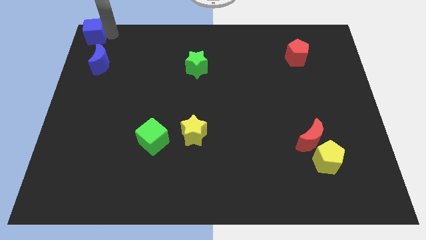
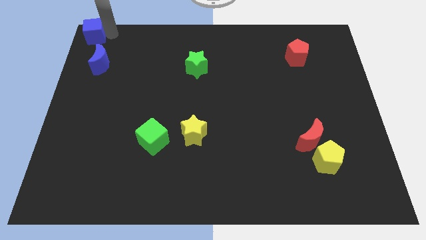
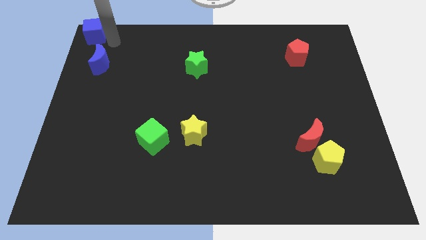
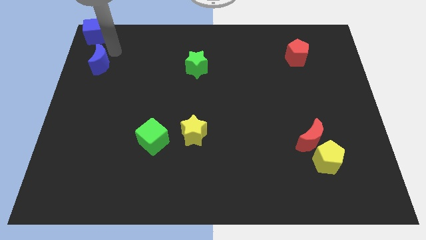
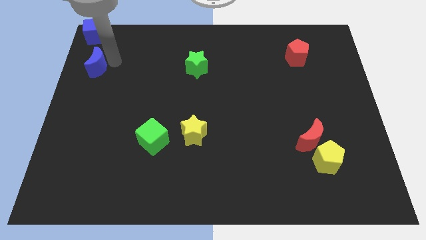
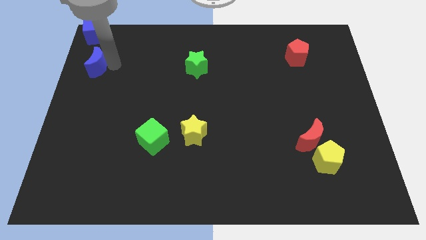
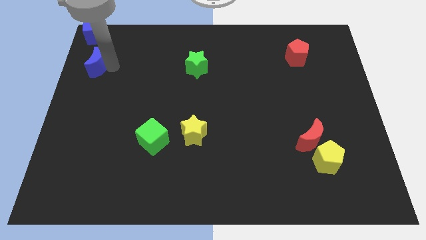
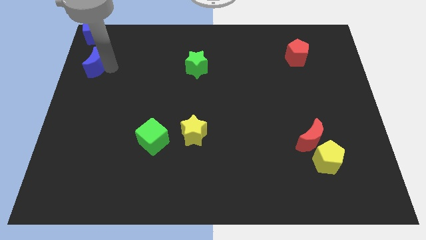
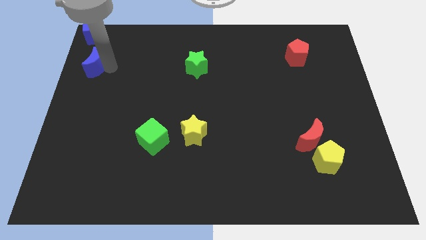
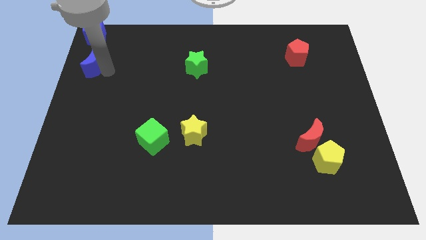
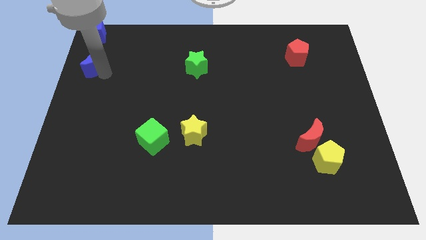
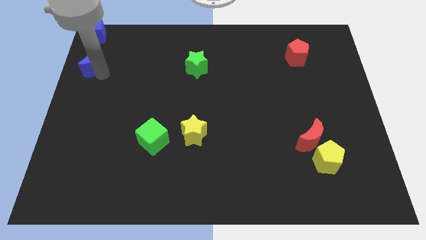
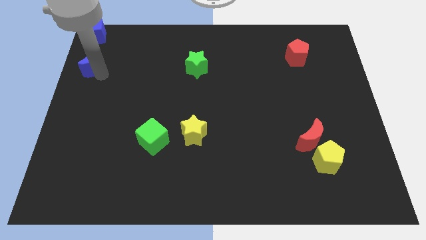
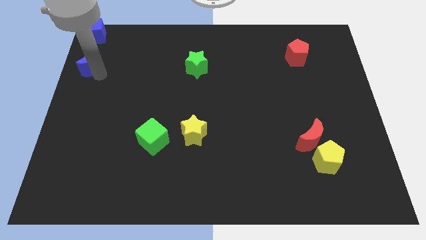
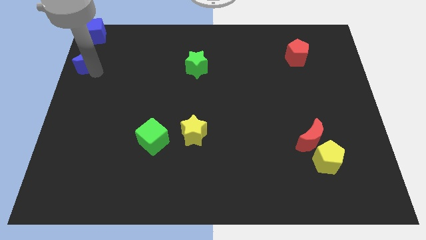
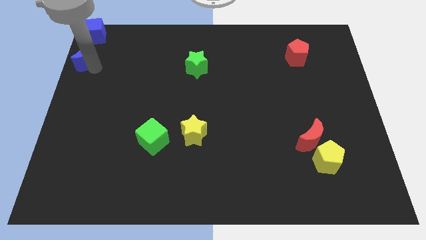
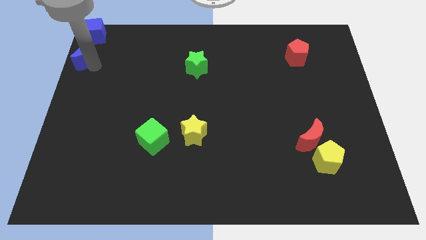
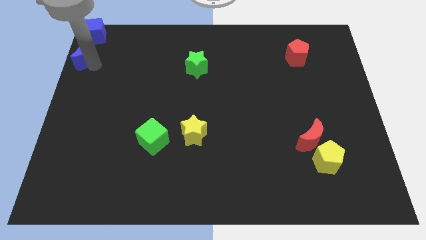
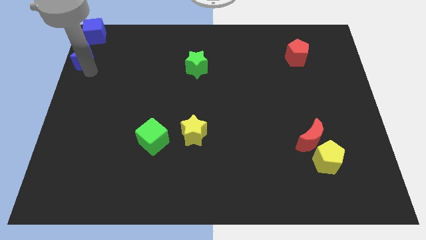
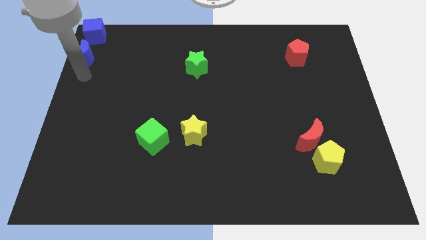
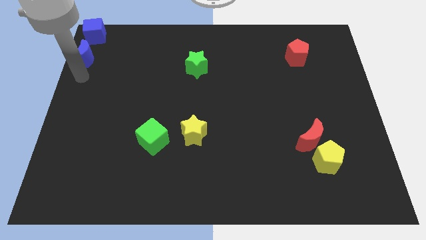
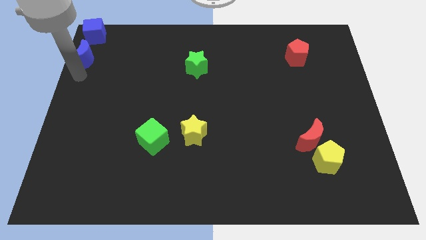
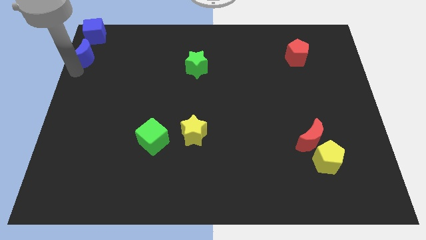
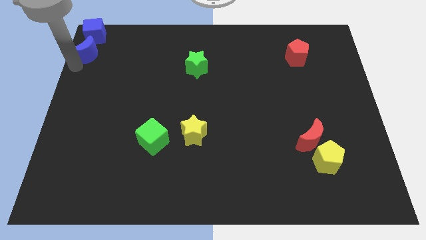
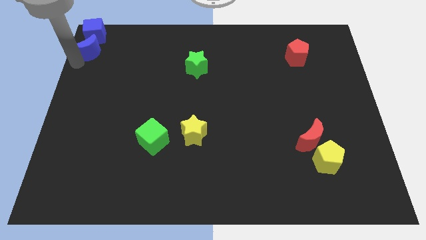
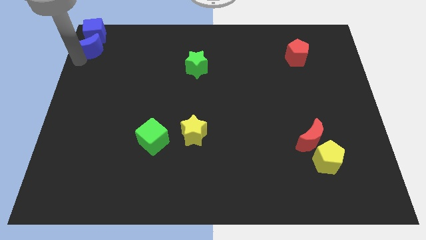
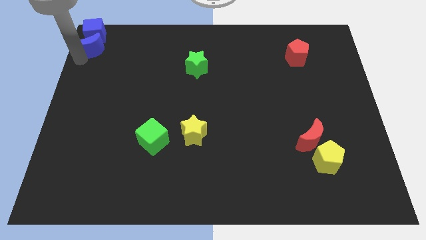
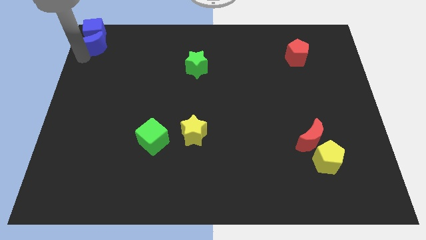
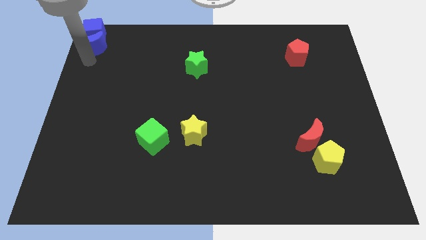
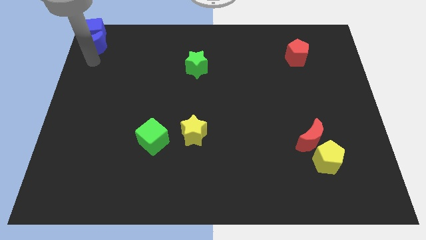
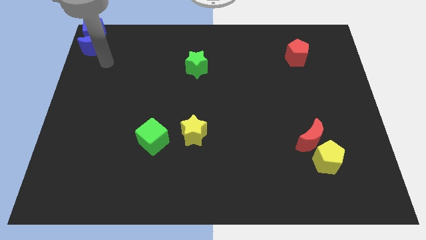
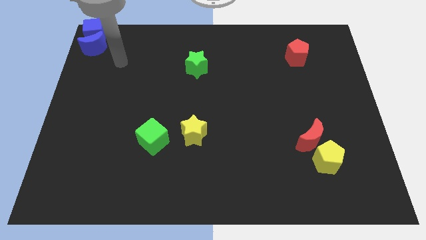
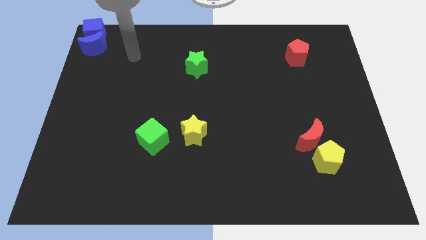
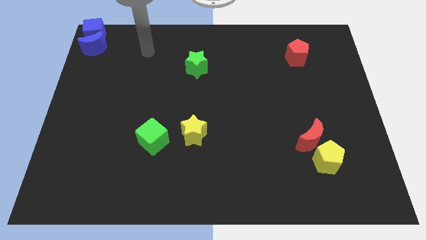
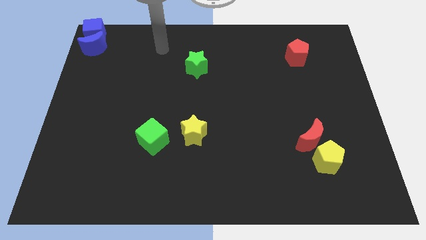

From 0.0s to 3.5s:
push the blue moon to the bottom side of the blue cube

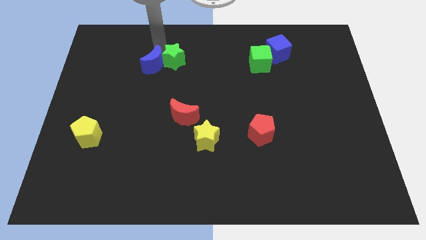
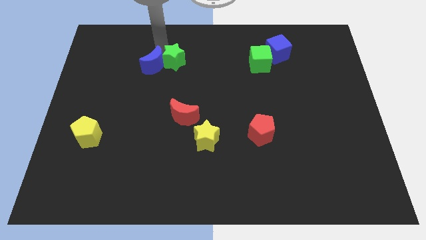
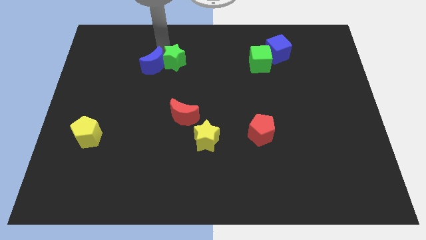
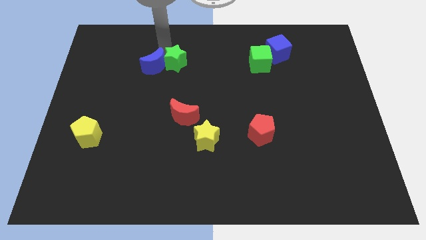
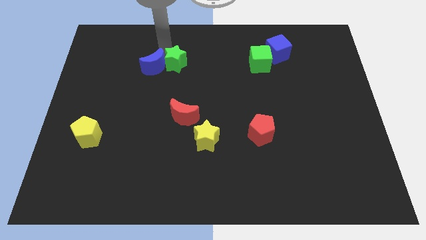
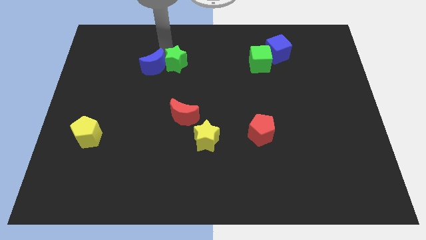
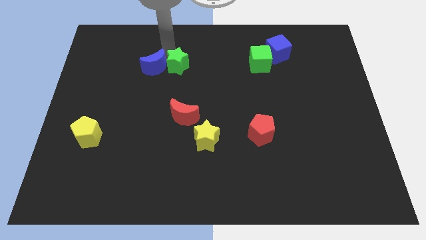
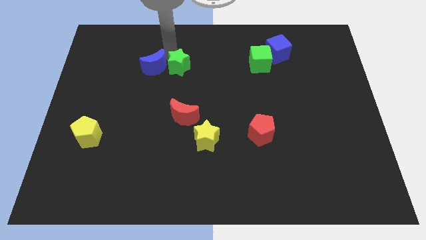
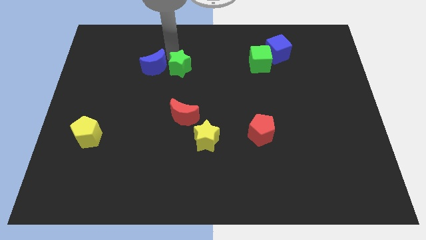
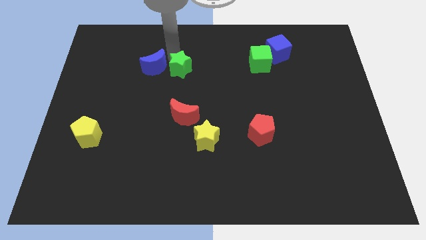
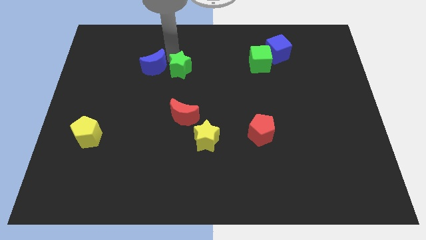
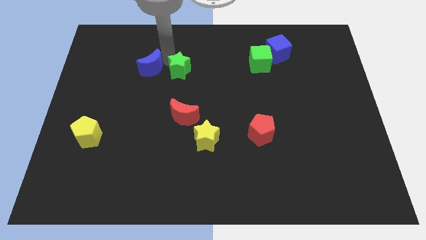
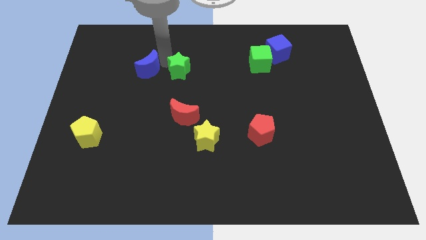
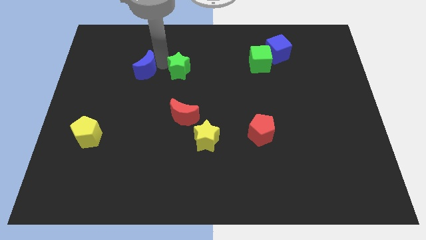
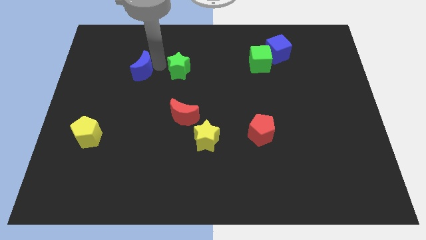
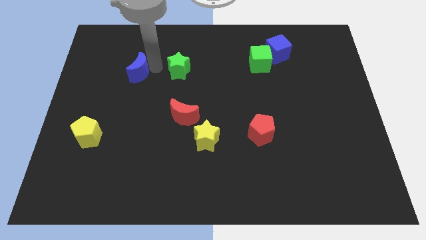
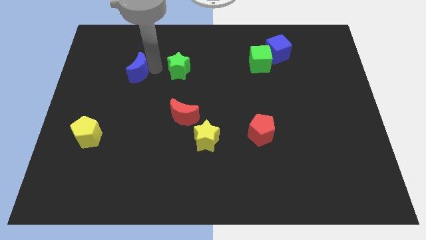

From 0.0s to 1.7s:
separate the green star and blue moon

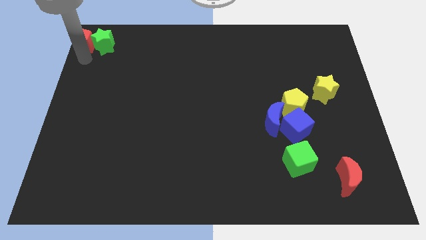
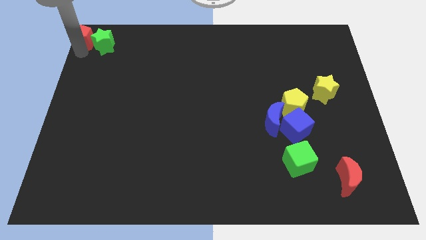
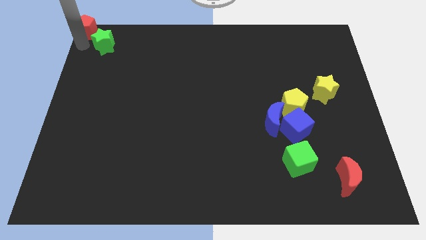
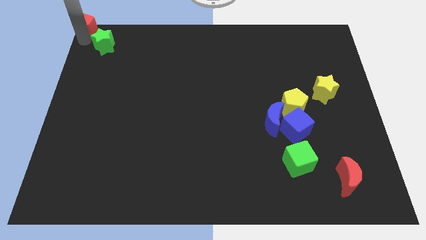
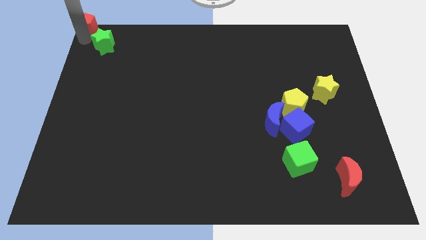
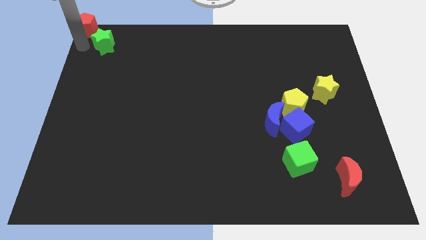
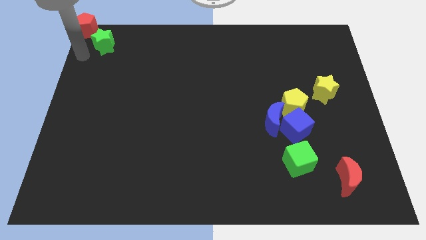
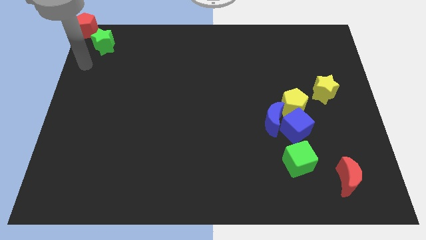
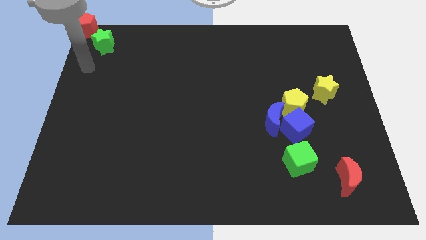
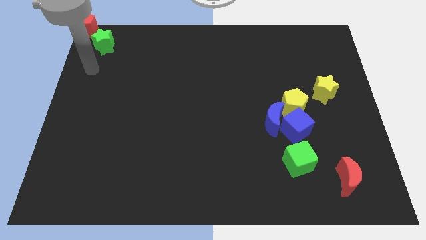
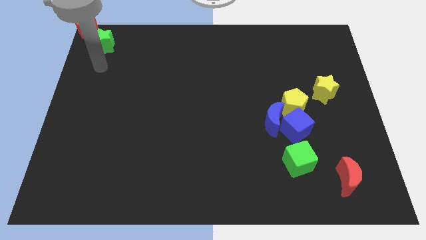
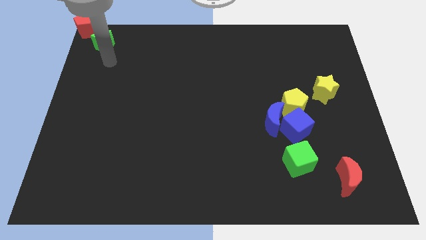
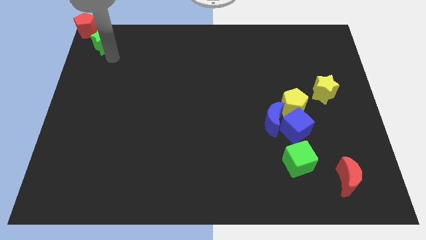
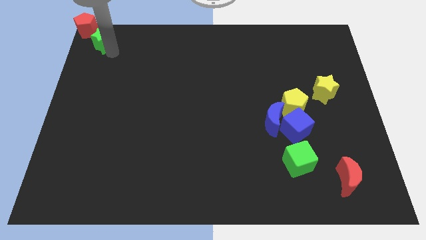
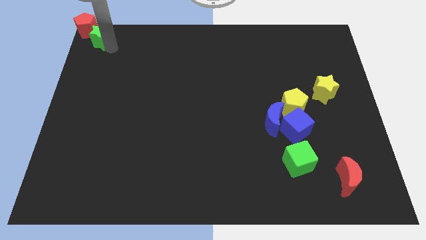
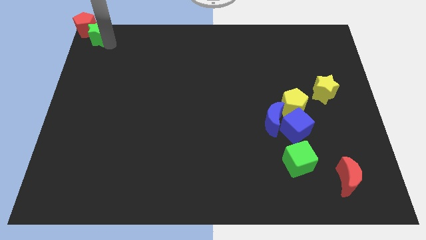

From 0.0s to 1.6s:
push the red pentagon and the green star to the top left corner of the board

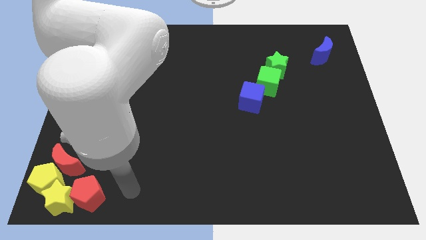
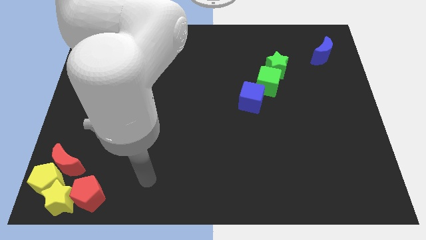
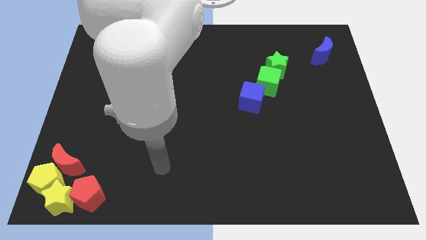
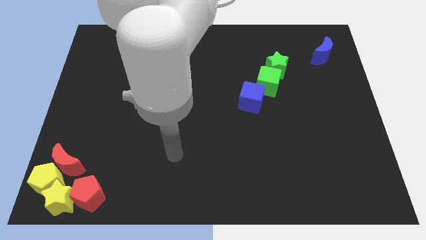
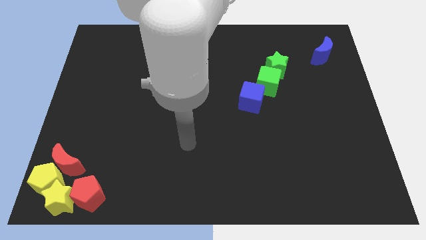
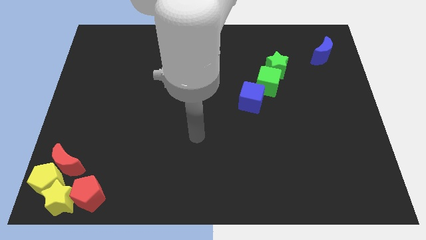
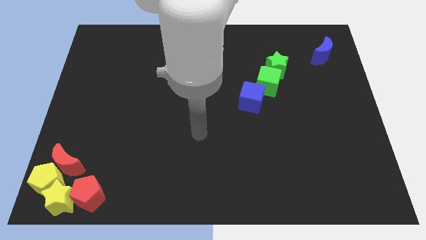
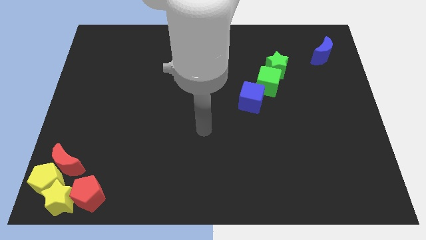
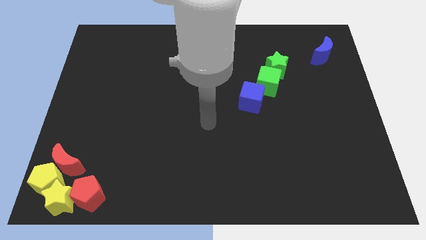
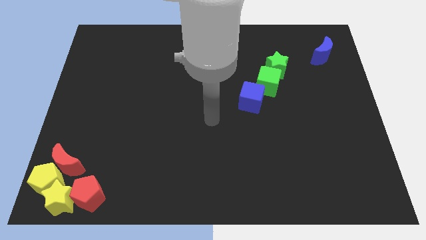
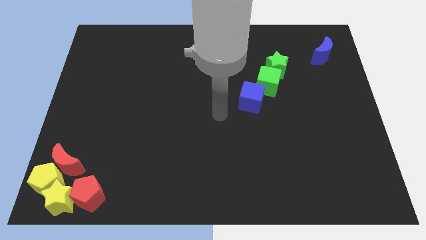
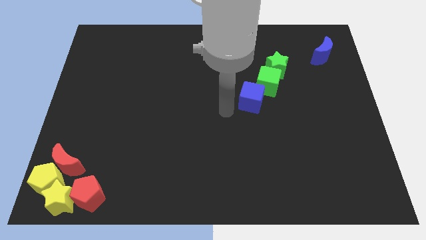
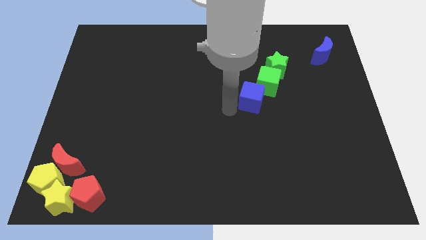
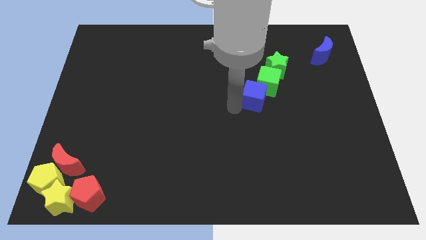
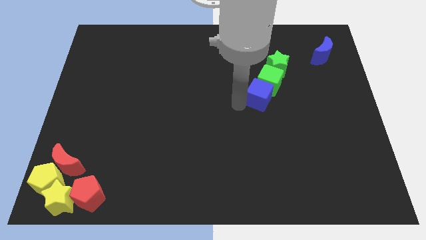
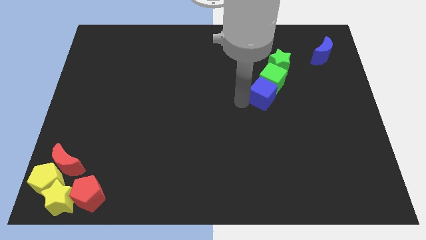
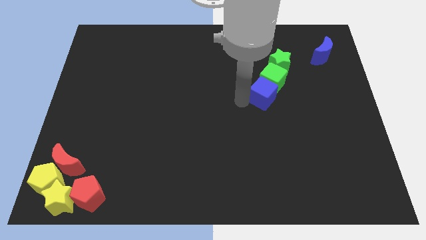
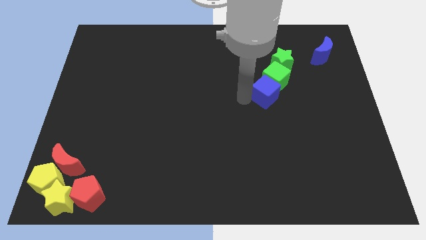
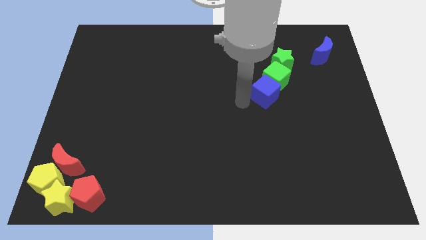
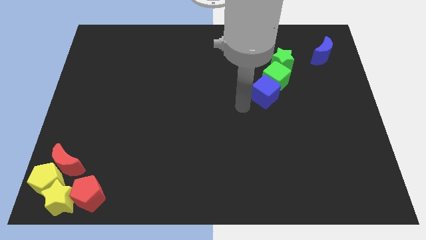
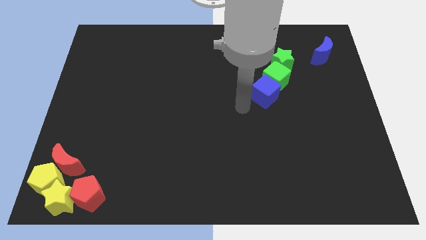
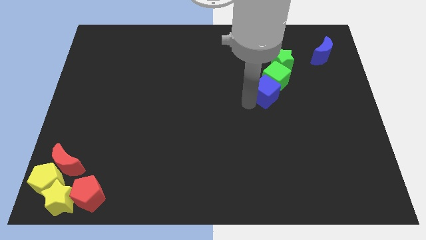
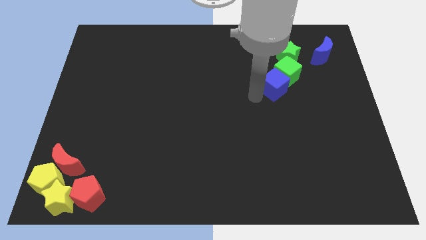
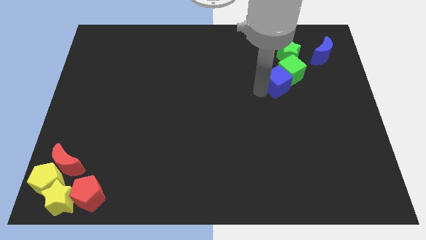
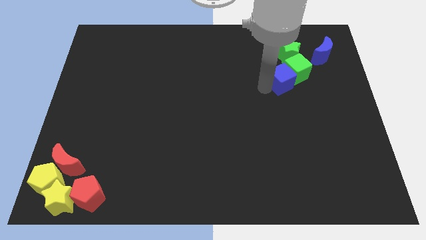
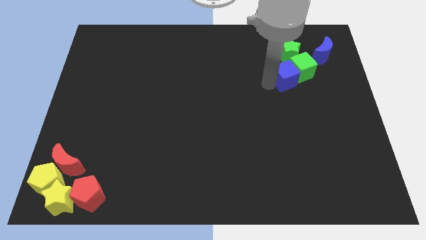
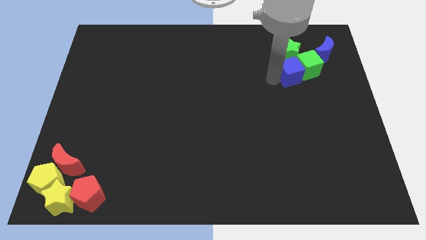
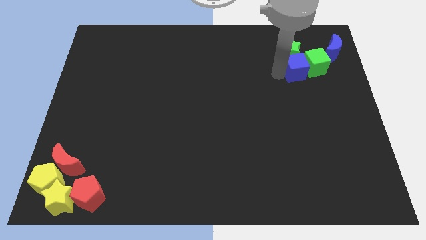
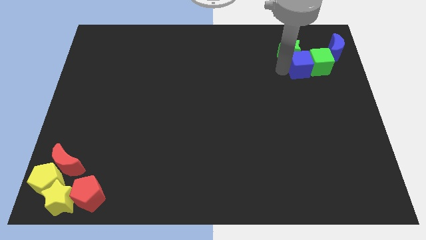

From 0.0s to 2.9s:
push the blue blocks and green cube to the top right side
